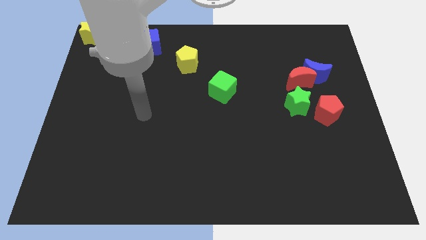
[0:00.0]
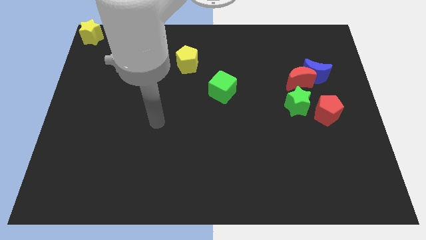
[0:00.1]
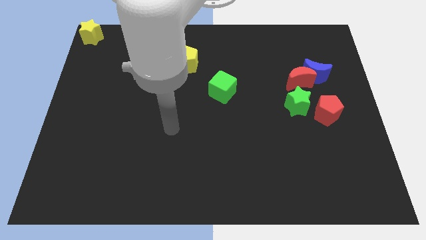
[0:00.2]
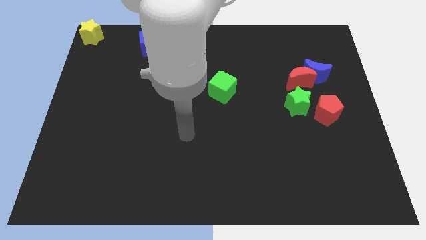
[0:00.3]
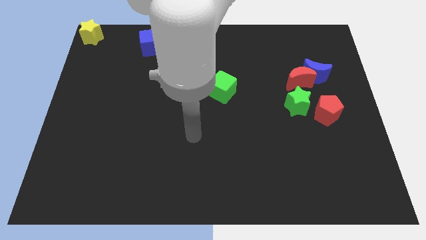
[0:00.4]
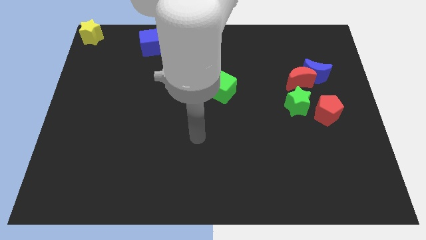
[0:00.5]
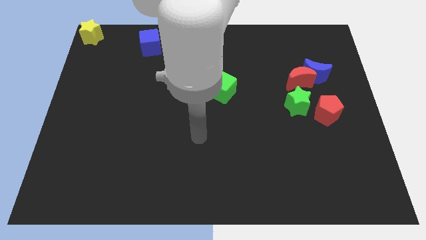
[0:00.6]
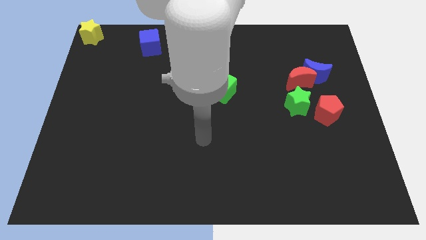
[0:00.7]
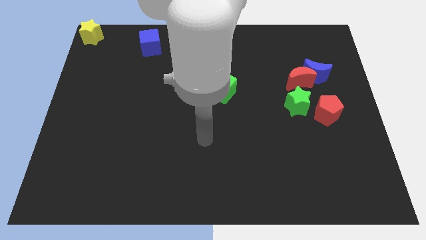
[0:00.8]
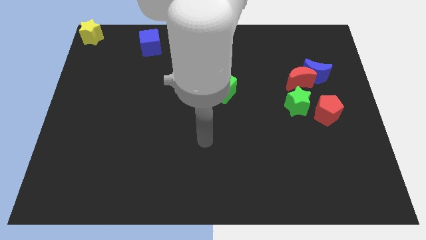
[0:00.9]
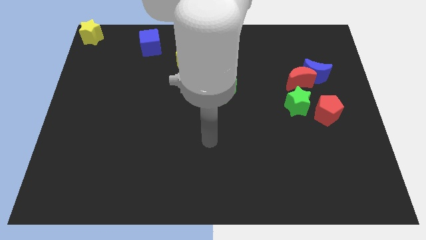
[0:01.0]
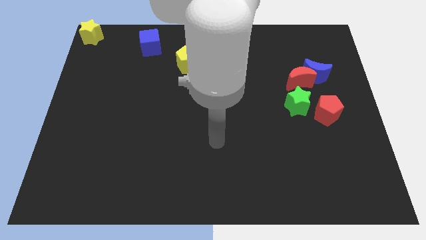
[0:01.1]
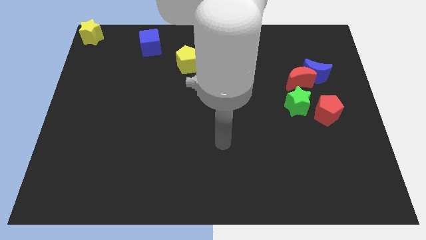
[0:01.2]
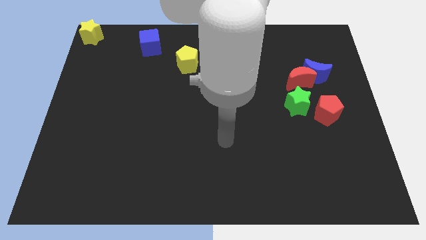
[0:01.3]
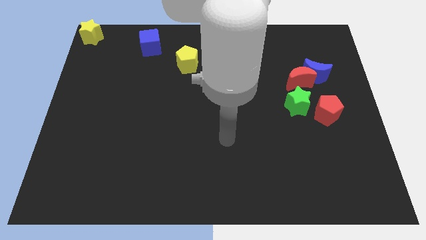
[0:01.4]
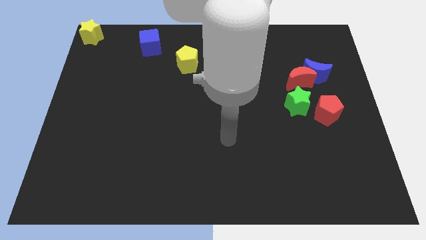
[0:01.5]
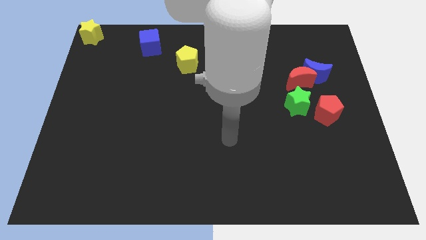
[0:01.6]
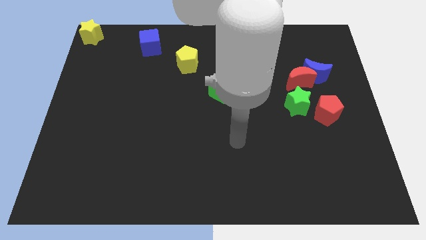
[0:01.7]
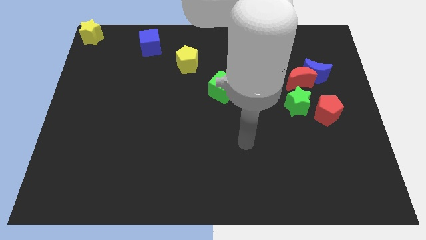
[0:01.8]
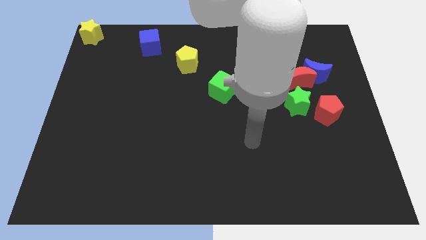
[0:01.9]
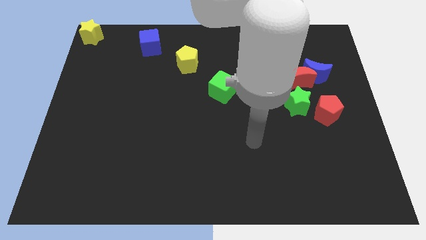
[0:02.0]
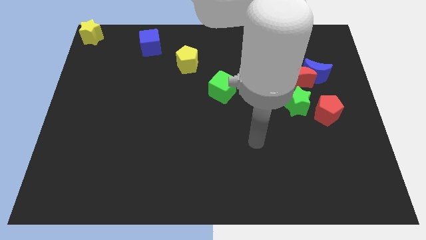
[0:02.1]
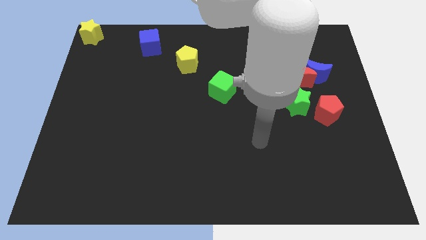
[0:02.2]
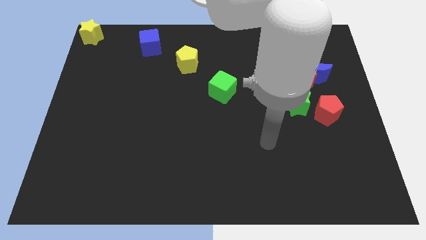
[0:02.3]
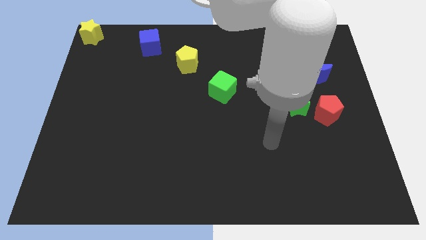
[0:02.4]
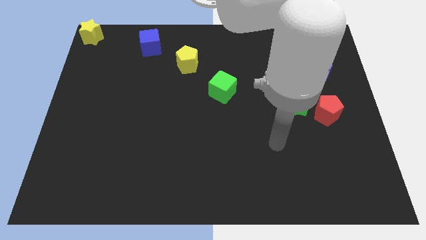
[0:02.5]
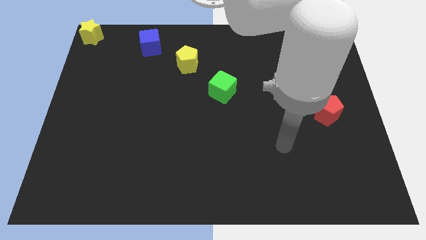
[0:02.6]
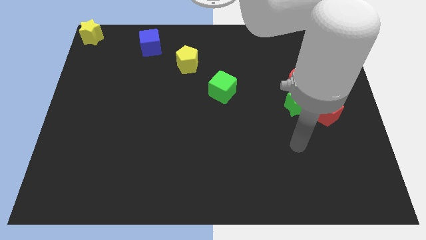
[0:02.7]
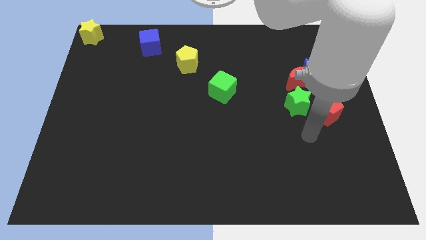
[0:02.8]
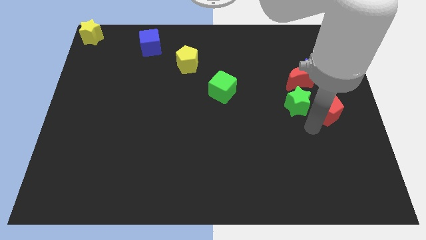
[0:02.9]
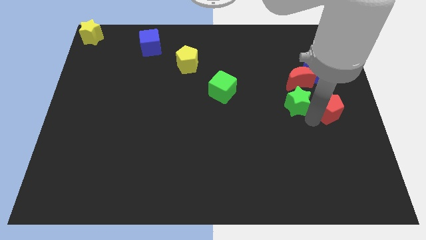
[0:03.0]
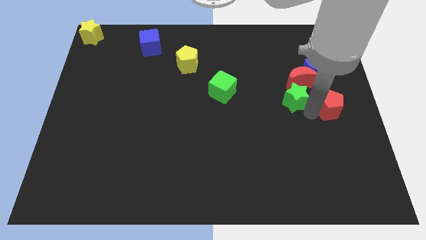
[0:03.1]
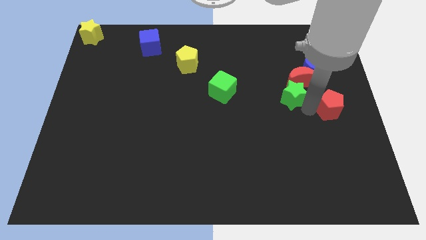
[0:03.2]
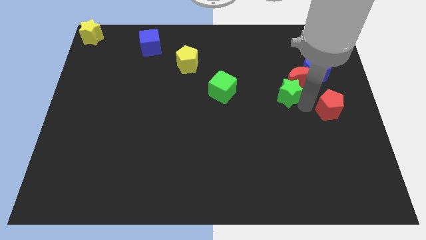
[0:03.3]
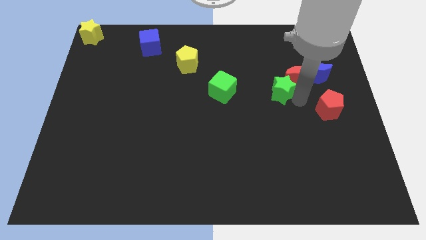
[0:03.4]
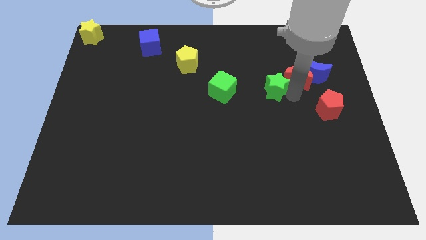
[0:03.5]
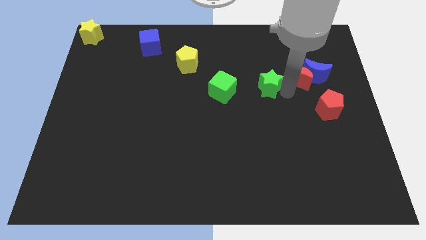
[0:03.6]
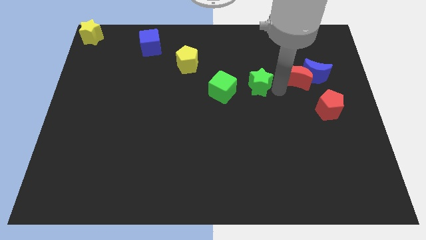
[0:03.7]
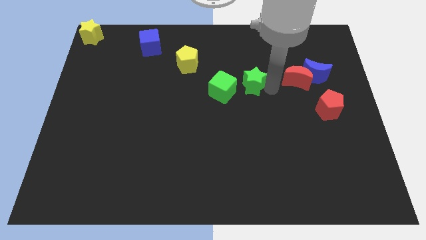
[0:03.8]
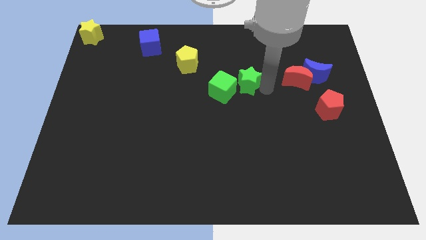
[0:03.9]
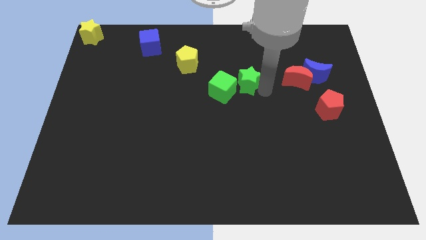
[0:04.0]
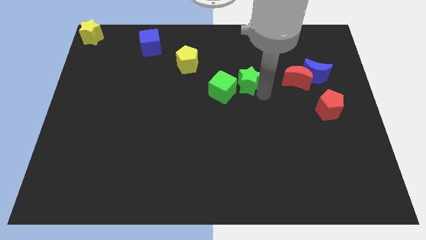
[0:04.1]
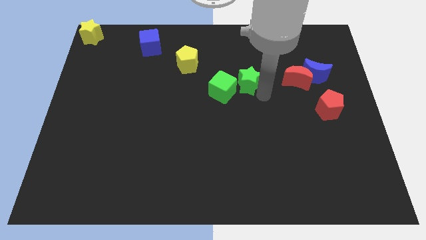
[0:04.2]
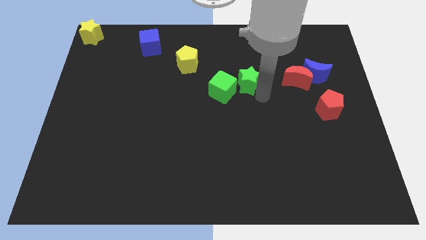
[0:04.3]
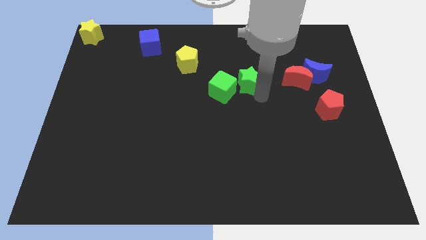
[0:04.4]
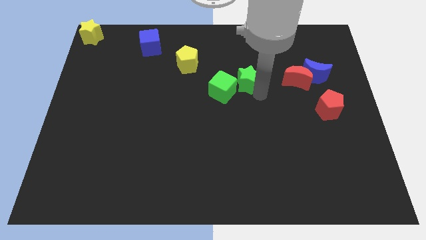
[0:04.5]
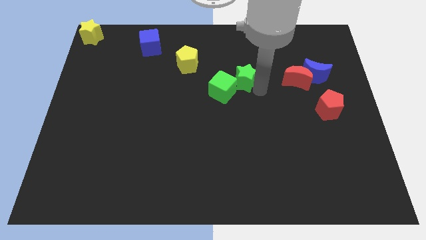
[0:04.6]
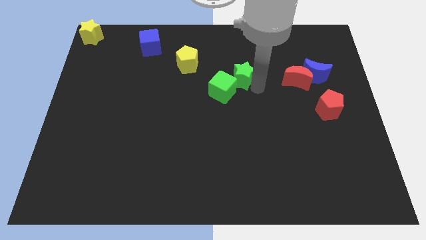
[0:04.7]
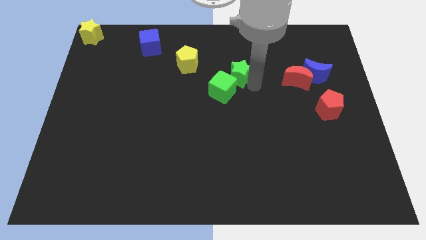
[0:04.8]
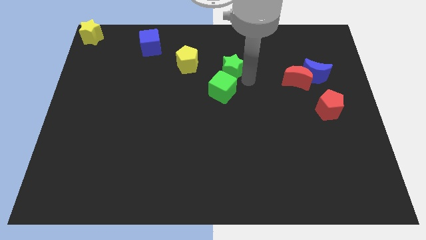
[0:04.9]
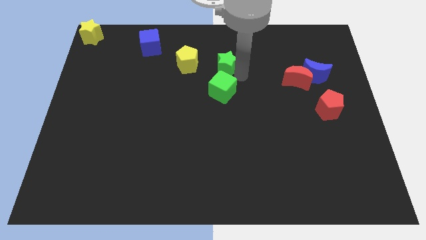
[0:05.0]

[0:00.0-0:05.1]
push green star to the top of green cube

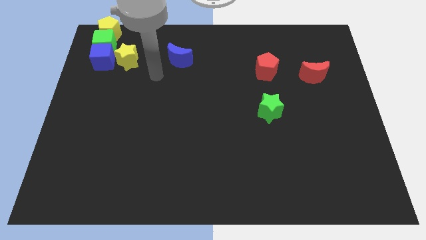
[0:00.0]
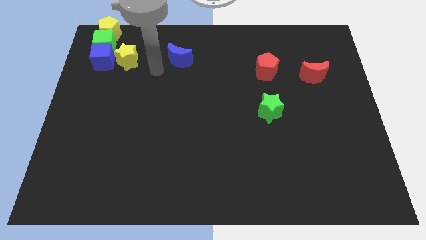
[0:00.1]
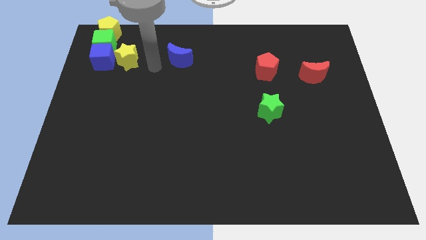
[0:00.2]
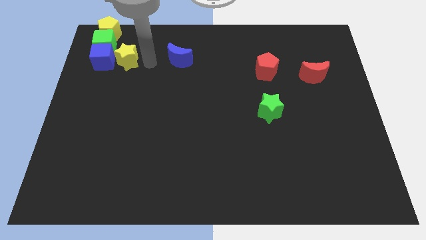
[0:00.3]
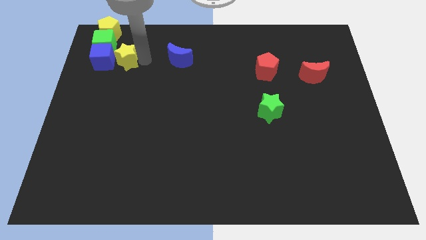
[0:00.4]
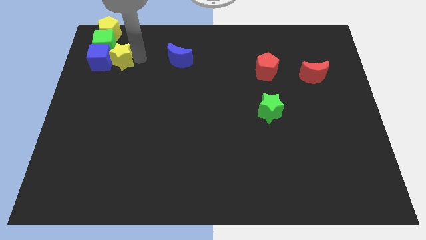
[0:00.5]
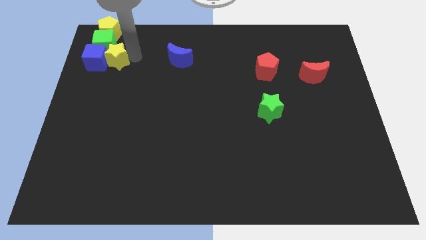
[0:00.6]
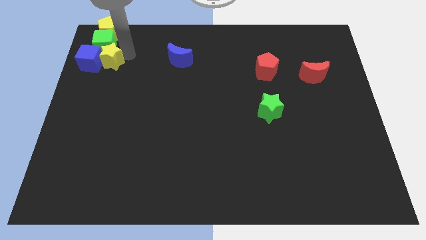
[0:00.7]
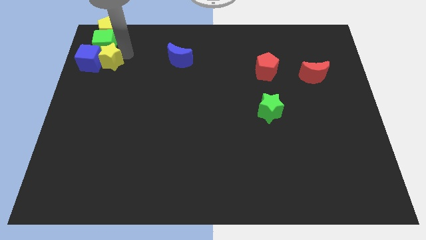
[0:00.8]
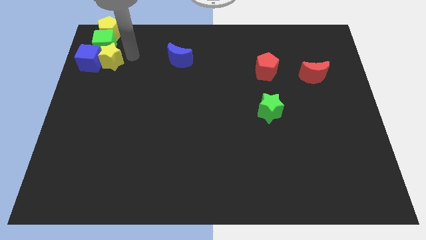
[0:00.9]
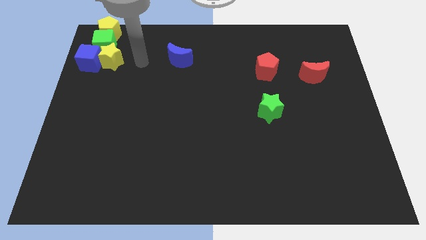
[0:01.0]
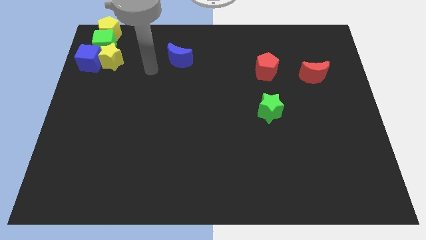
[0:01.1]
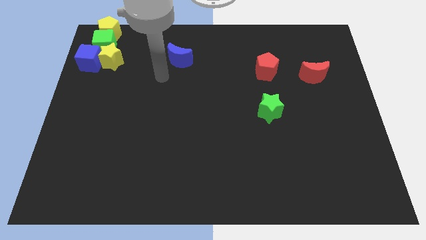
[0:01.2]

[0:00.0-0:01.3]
move the yellow star to the right of the blue cube

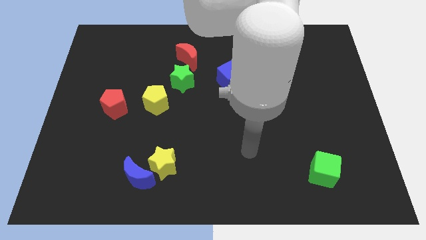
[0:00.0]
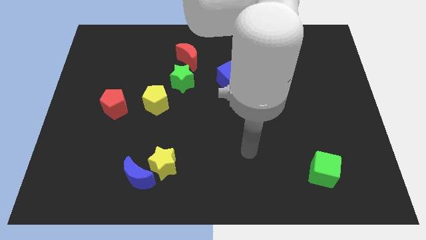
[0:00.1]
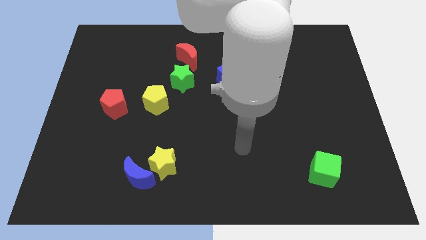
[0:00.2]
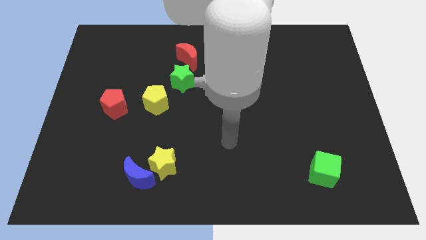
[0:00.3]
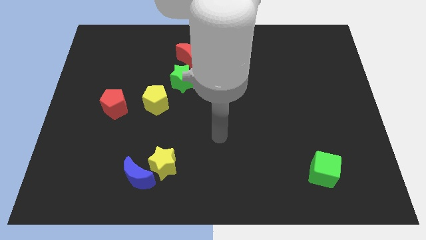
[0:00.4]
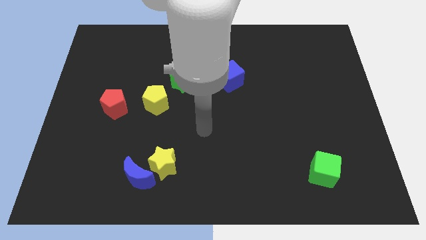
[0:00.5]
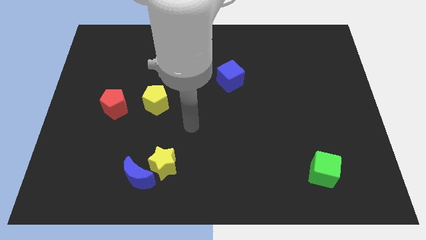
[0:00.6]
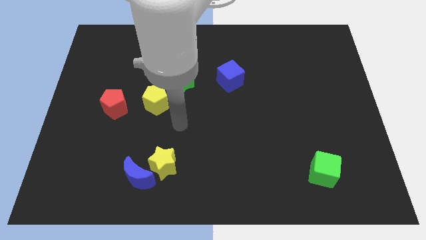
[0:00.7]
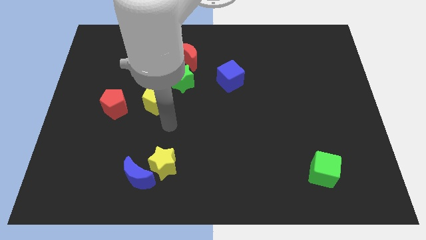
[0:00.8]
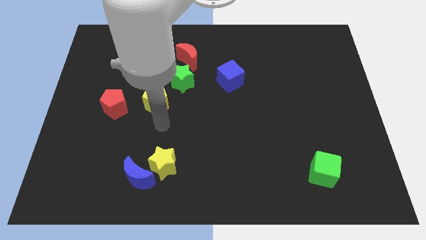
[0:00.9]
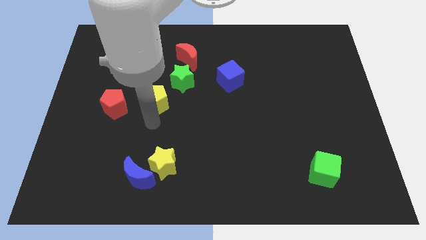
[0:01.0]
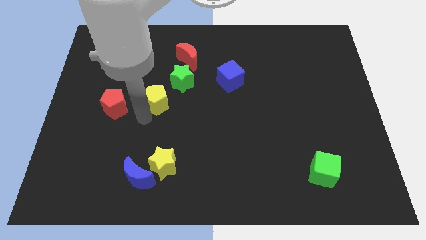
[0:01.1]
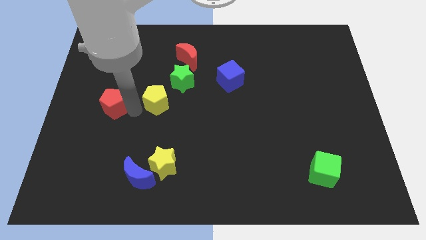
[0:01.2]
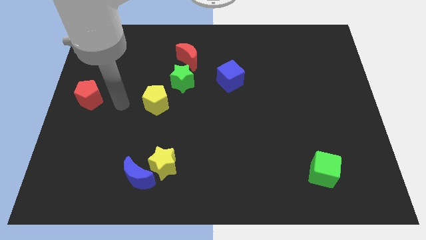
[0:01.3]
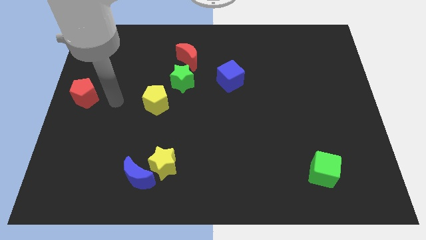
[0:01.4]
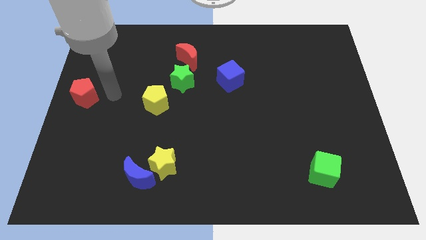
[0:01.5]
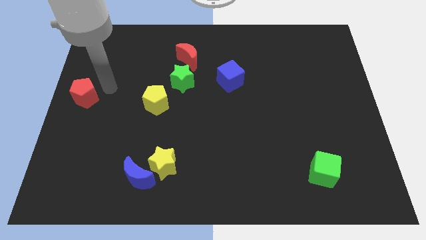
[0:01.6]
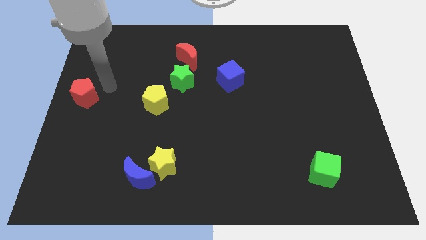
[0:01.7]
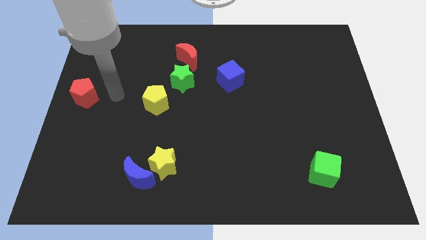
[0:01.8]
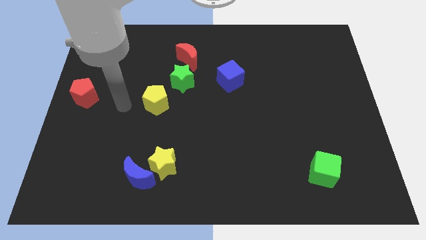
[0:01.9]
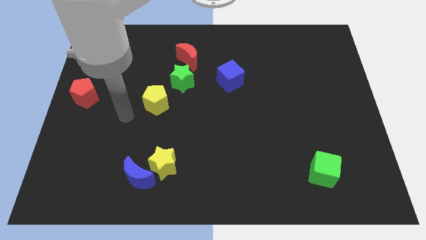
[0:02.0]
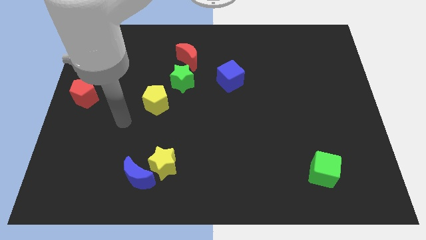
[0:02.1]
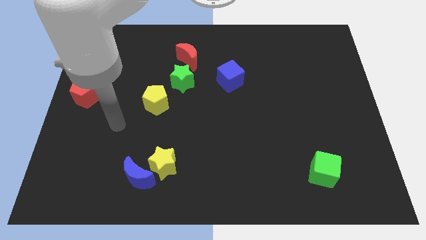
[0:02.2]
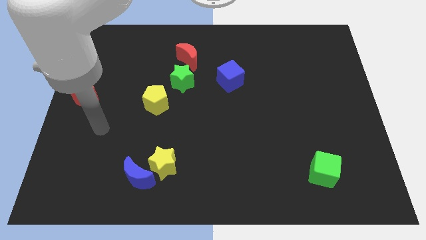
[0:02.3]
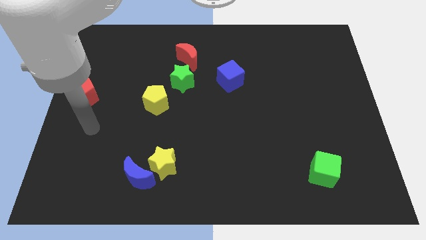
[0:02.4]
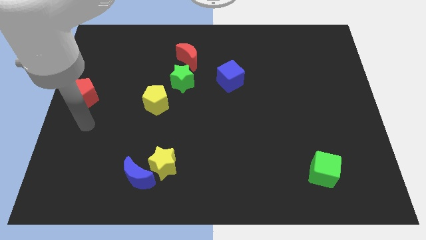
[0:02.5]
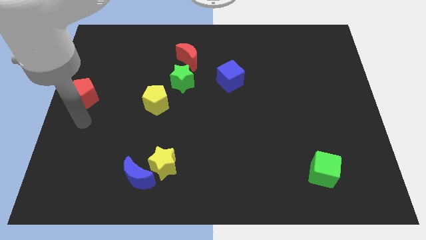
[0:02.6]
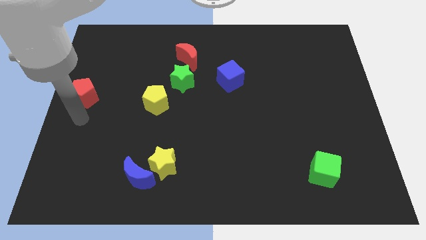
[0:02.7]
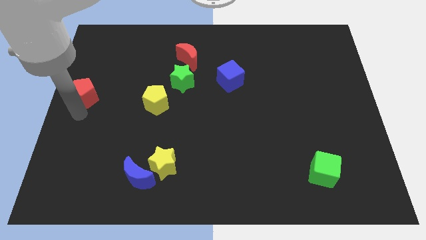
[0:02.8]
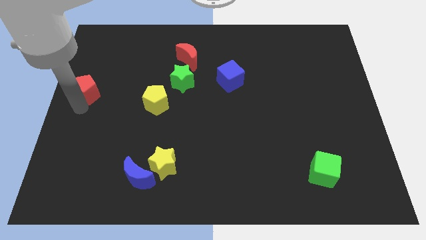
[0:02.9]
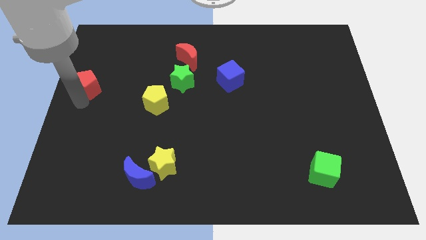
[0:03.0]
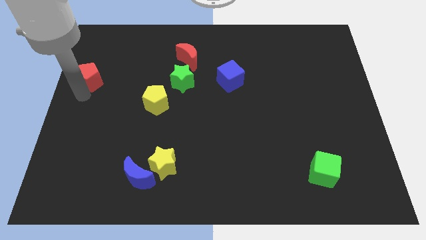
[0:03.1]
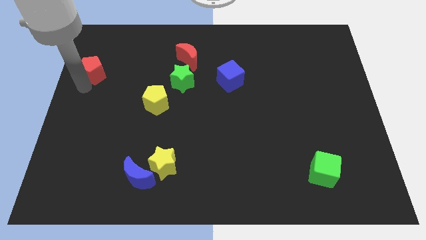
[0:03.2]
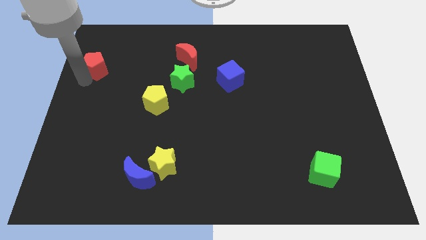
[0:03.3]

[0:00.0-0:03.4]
push the red pentagon to the top left of the yellow pentagon
